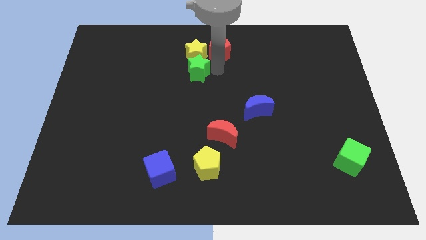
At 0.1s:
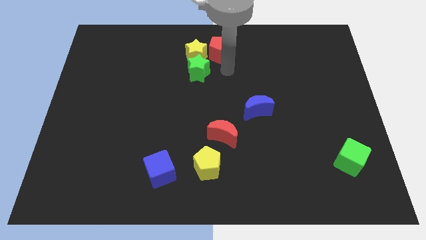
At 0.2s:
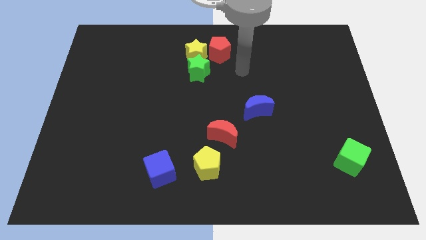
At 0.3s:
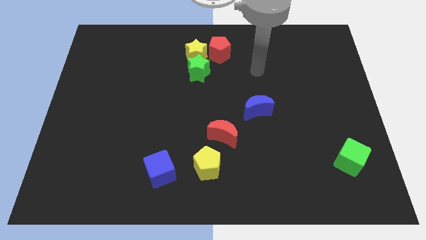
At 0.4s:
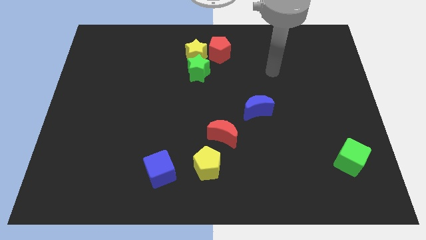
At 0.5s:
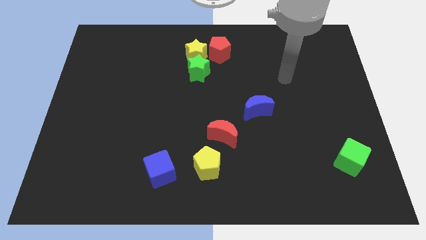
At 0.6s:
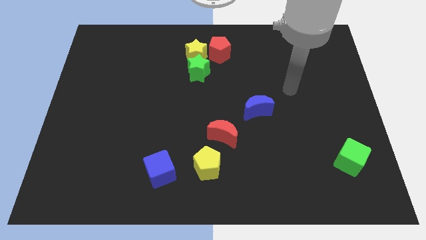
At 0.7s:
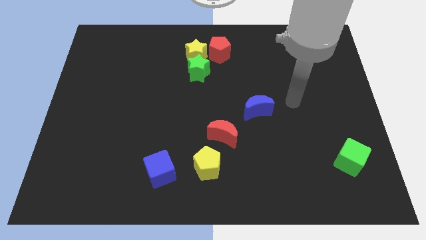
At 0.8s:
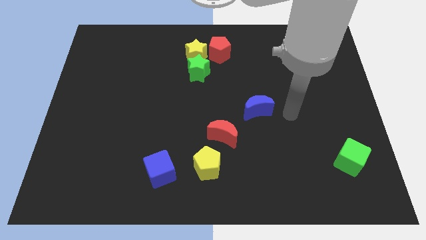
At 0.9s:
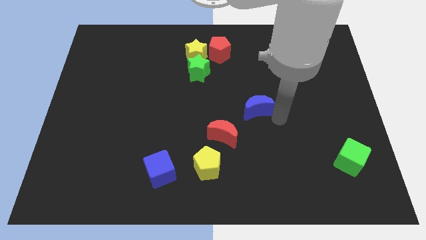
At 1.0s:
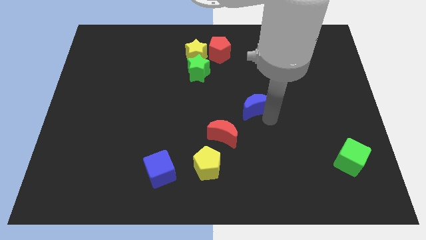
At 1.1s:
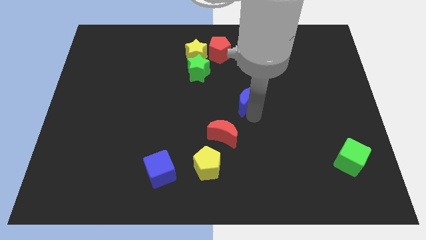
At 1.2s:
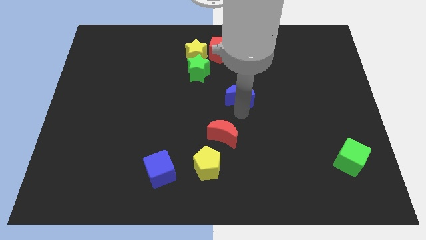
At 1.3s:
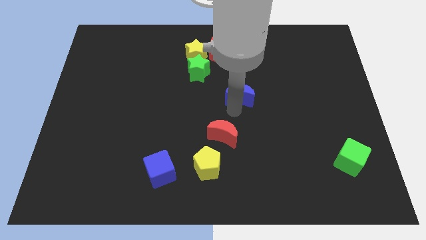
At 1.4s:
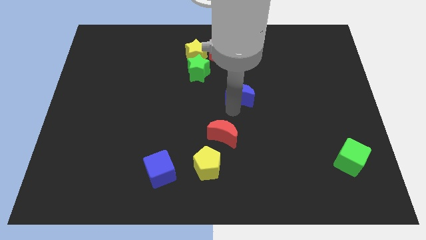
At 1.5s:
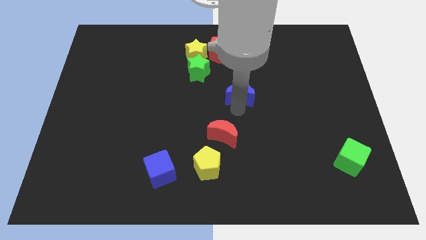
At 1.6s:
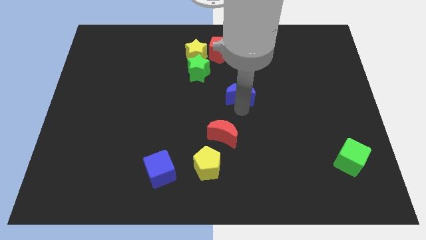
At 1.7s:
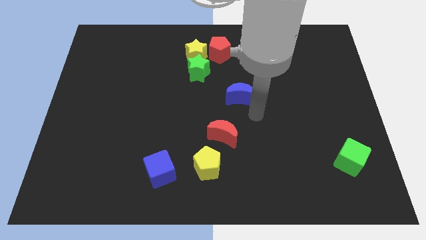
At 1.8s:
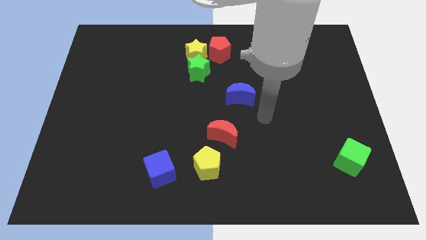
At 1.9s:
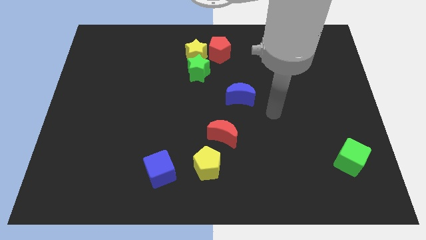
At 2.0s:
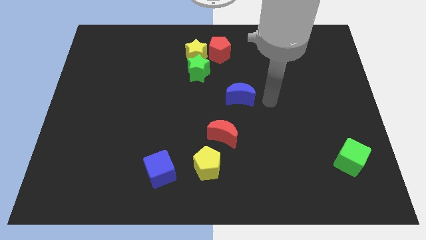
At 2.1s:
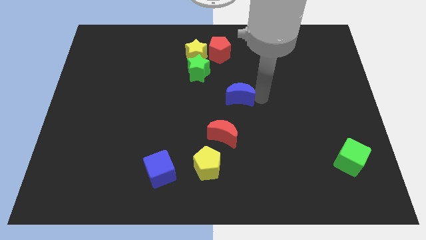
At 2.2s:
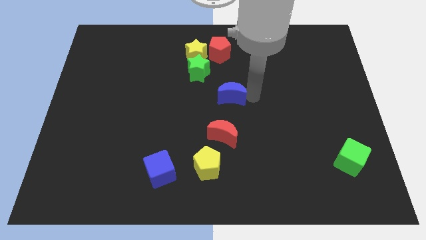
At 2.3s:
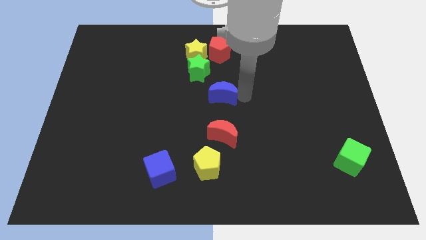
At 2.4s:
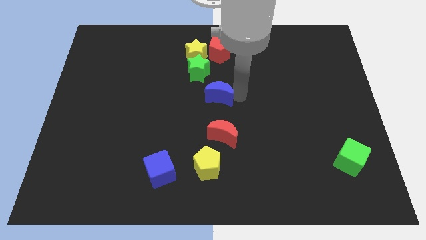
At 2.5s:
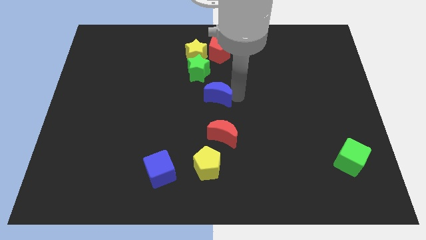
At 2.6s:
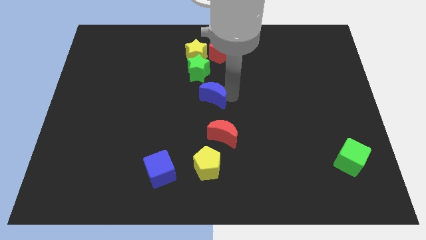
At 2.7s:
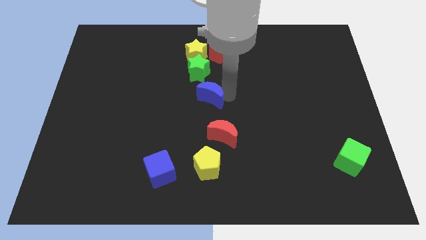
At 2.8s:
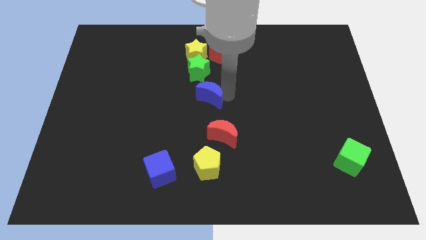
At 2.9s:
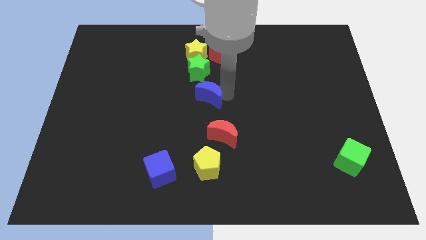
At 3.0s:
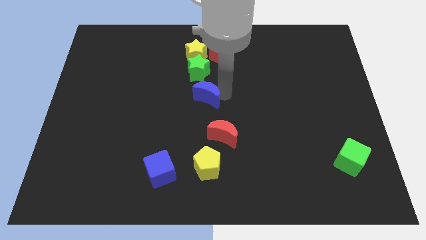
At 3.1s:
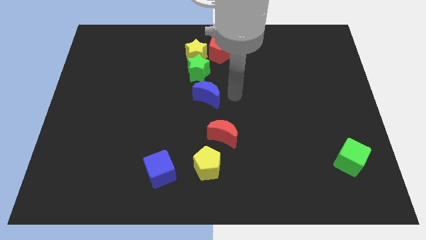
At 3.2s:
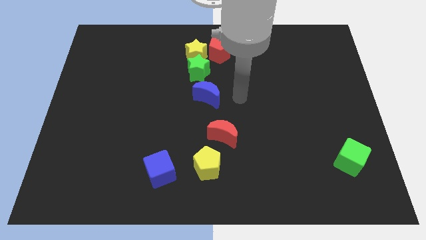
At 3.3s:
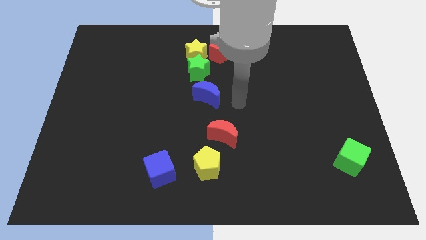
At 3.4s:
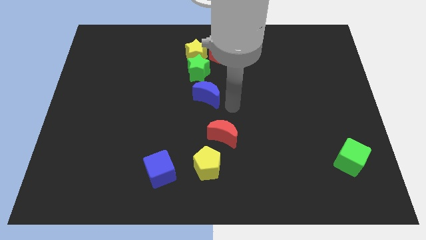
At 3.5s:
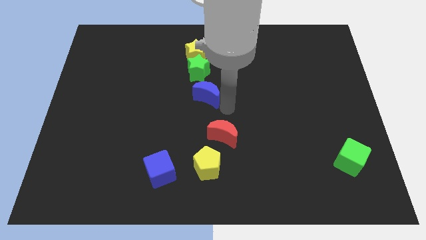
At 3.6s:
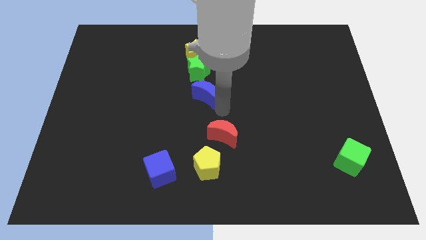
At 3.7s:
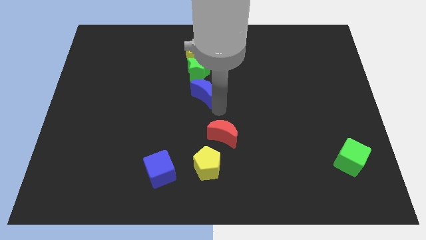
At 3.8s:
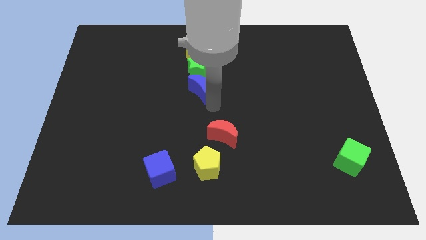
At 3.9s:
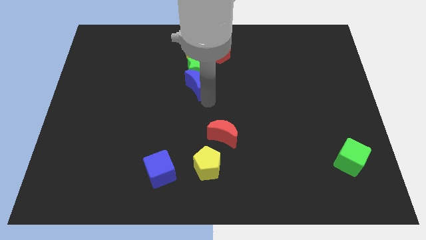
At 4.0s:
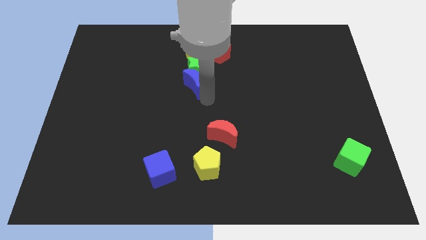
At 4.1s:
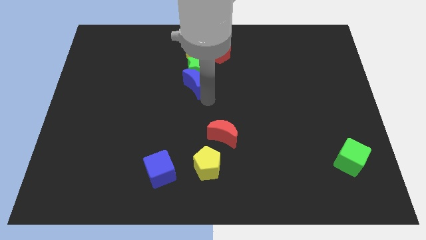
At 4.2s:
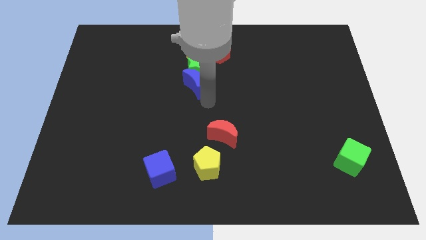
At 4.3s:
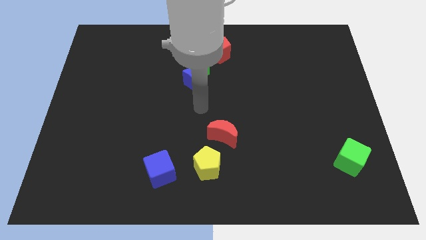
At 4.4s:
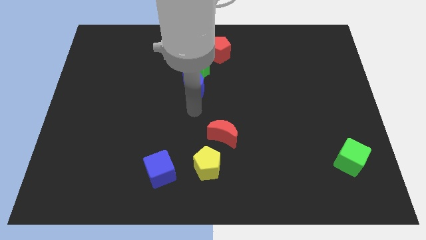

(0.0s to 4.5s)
push the blue crescent to the top left of the red crescent

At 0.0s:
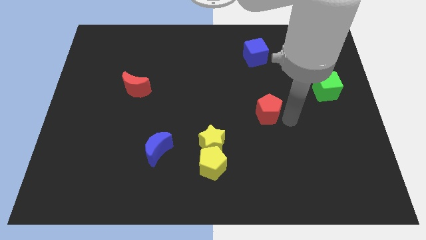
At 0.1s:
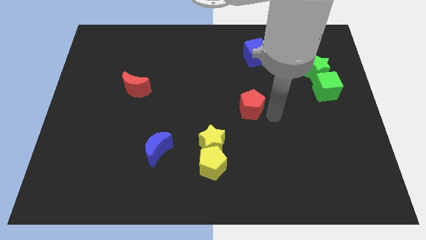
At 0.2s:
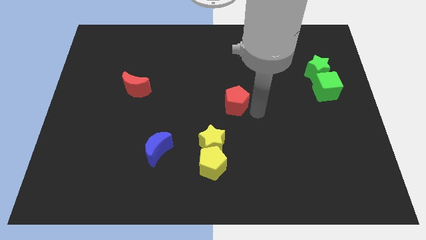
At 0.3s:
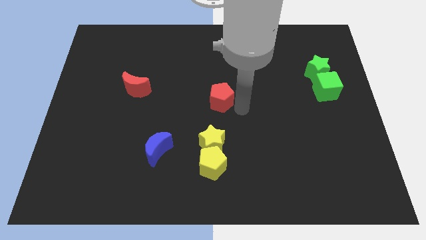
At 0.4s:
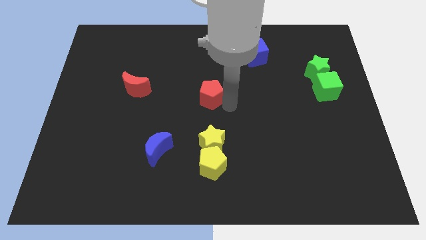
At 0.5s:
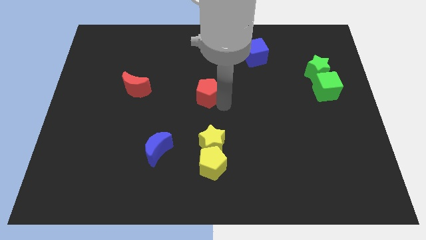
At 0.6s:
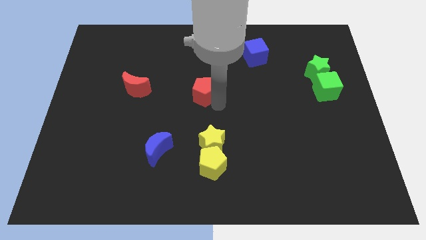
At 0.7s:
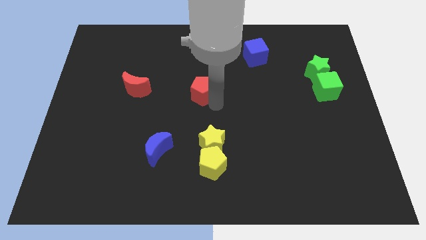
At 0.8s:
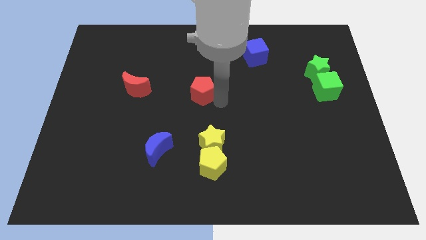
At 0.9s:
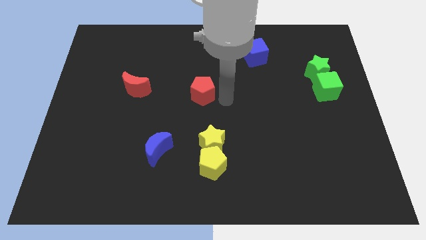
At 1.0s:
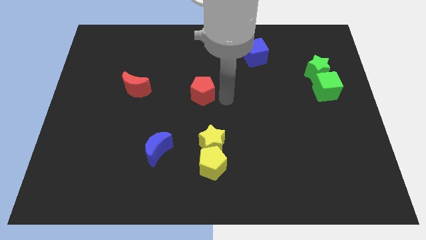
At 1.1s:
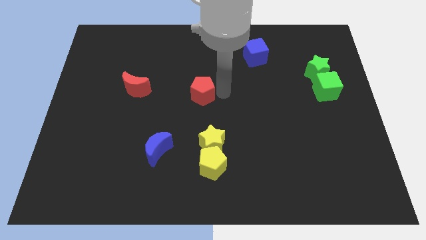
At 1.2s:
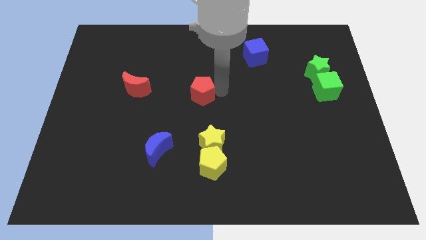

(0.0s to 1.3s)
push red pentagon to the center of the board

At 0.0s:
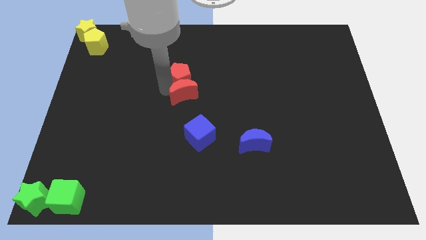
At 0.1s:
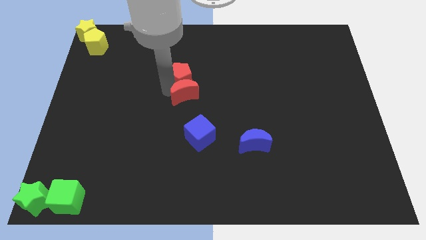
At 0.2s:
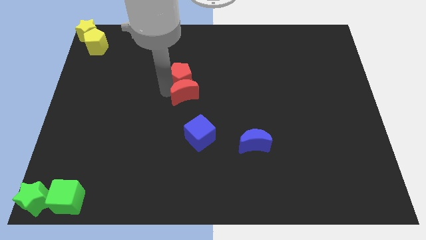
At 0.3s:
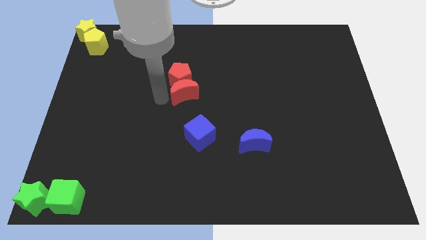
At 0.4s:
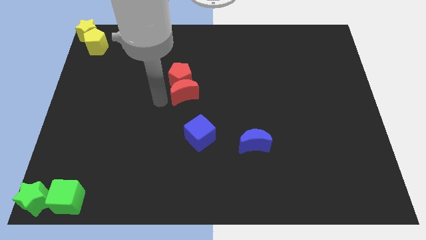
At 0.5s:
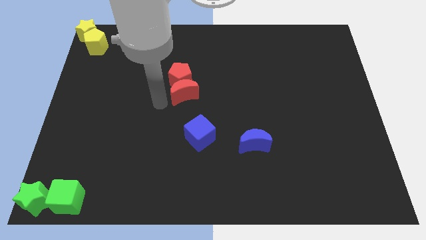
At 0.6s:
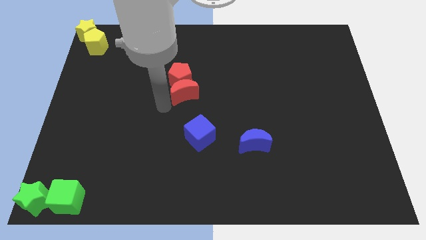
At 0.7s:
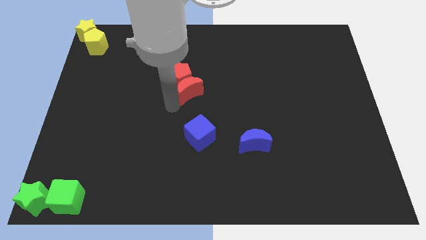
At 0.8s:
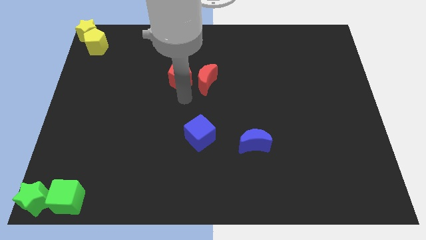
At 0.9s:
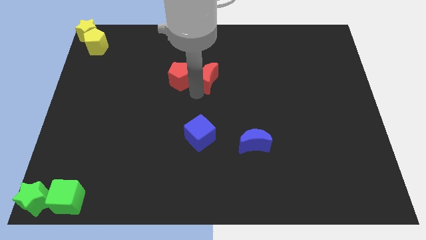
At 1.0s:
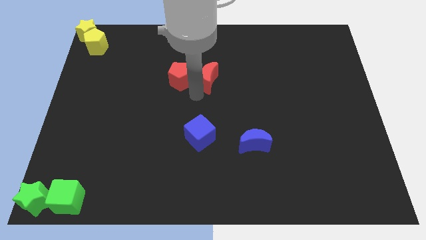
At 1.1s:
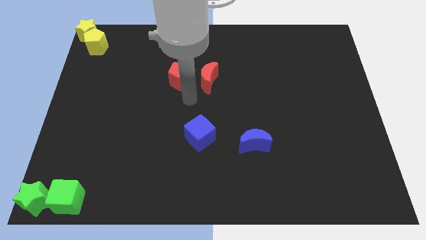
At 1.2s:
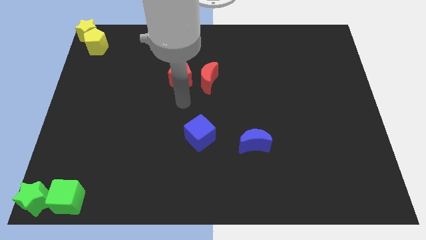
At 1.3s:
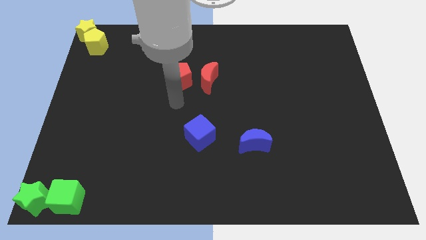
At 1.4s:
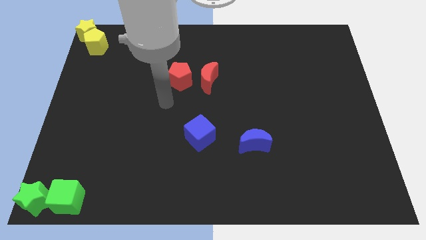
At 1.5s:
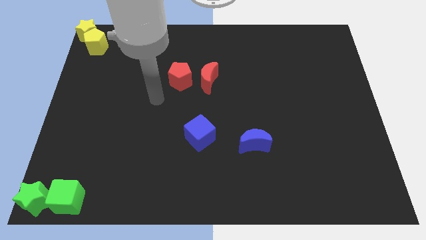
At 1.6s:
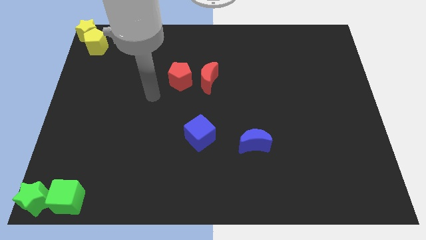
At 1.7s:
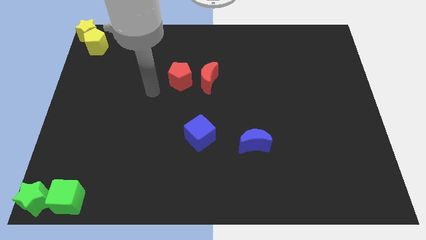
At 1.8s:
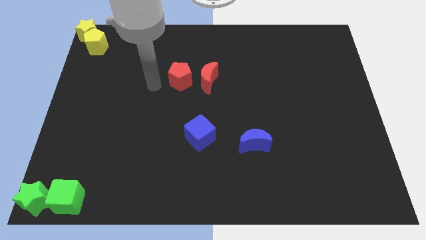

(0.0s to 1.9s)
place red moon and red pentagon towards the center of the board

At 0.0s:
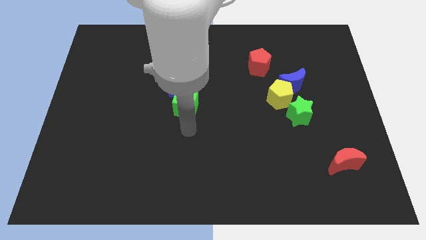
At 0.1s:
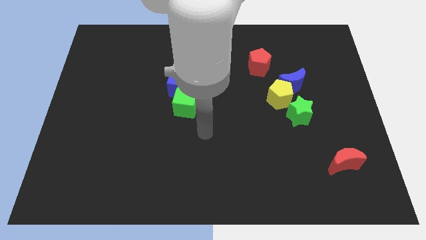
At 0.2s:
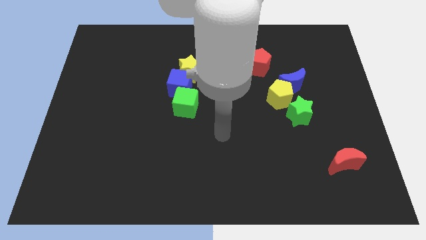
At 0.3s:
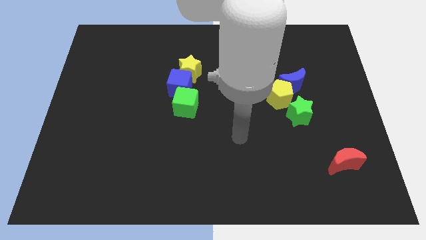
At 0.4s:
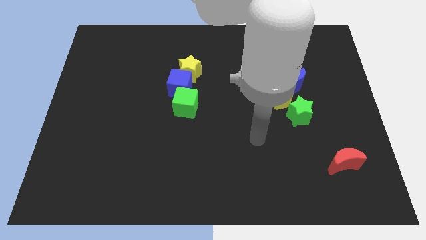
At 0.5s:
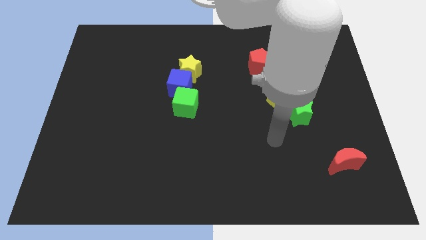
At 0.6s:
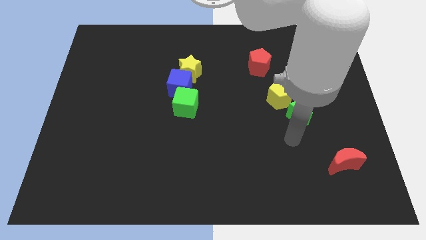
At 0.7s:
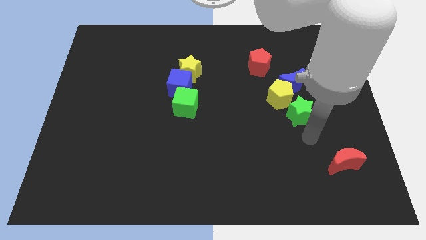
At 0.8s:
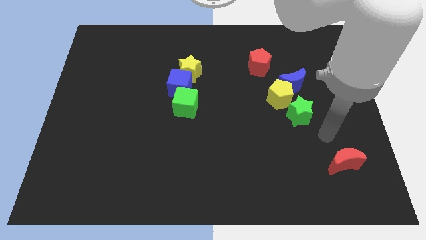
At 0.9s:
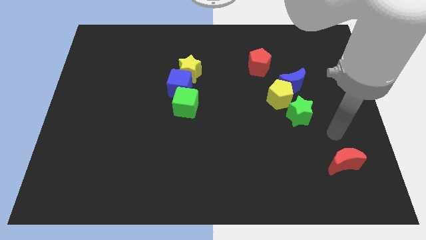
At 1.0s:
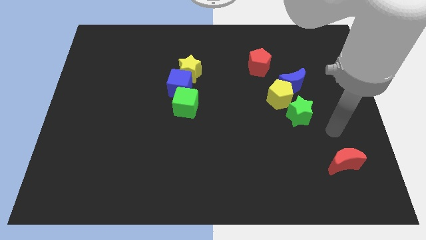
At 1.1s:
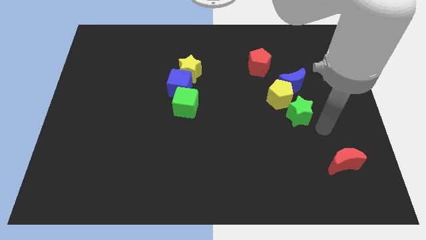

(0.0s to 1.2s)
place your arm to the bottom of green star

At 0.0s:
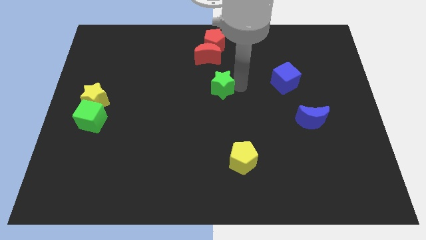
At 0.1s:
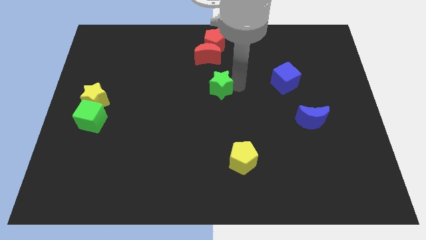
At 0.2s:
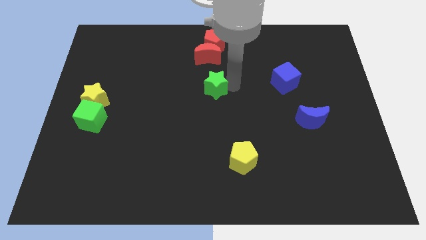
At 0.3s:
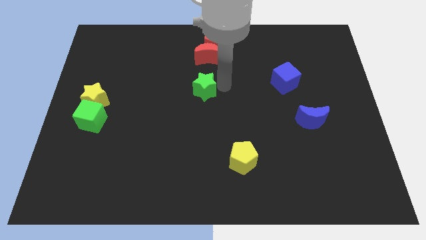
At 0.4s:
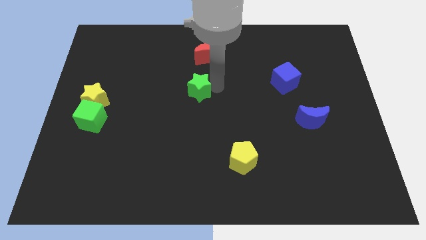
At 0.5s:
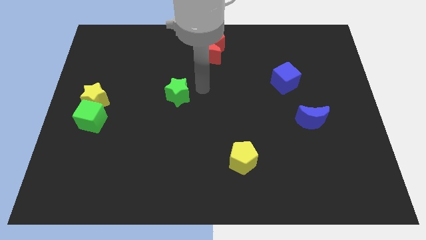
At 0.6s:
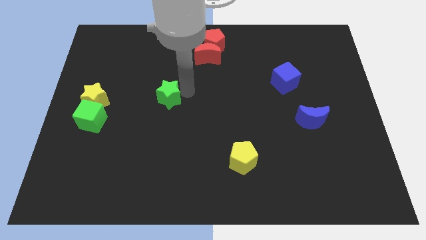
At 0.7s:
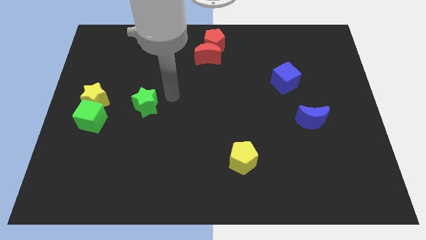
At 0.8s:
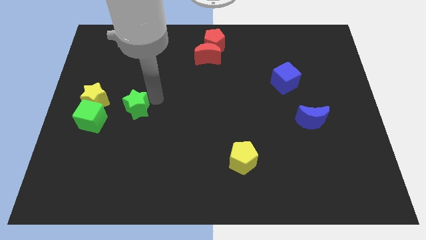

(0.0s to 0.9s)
move the green star slightly bottom left of the board
